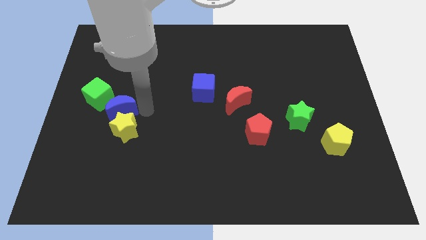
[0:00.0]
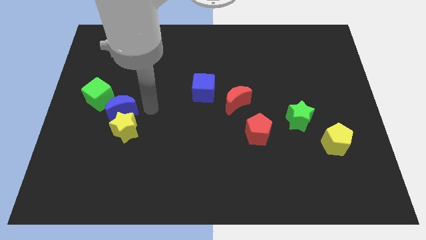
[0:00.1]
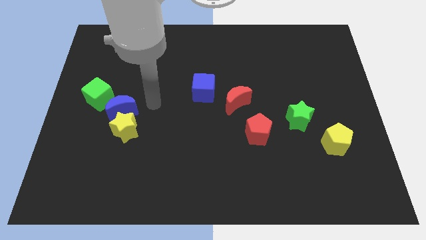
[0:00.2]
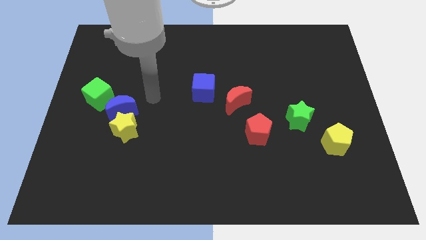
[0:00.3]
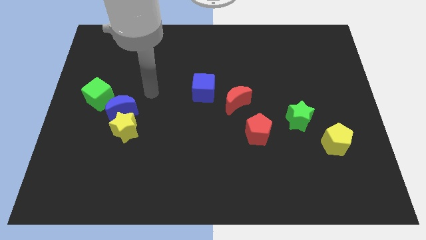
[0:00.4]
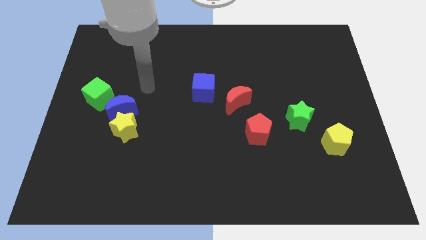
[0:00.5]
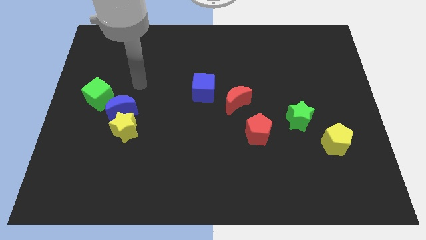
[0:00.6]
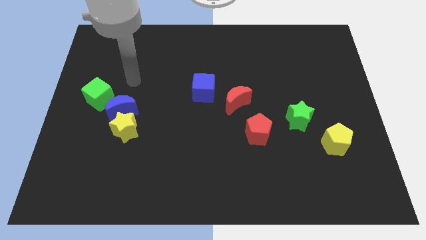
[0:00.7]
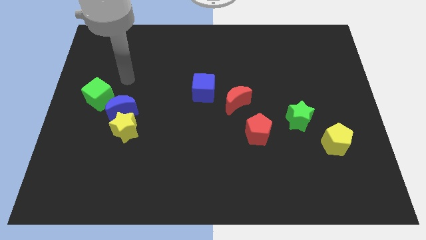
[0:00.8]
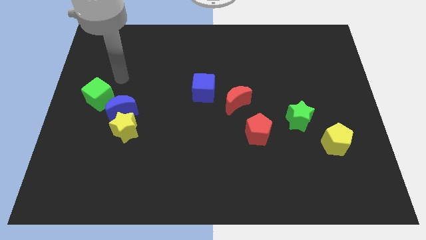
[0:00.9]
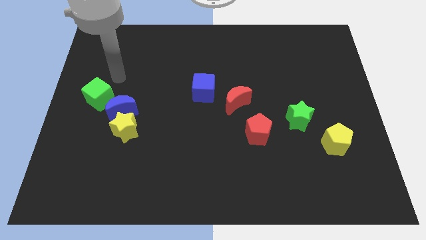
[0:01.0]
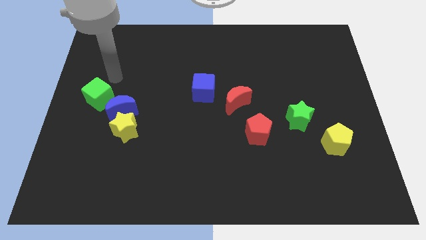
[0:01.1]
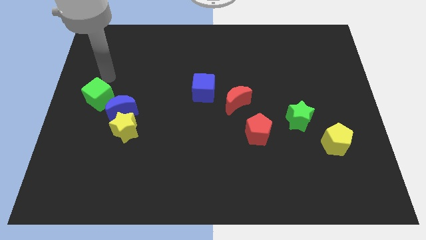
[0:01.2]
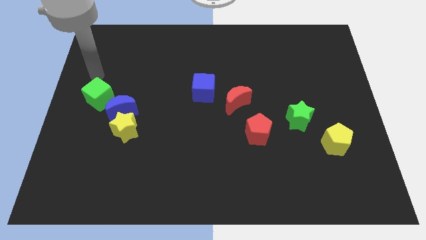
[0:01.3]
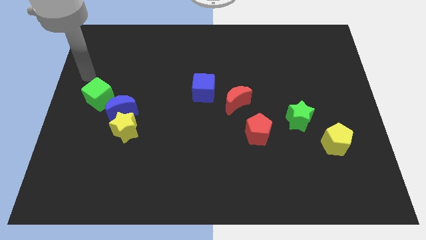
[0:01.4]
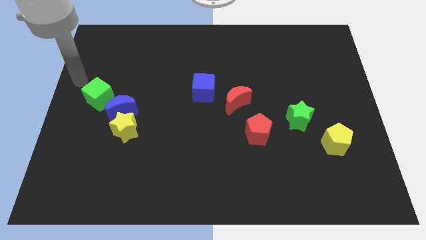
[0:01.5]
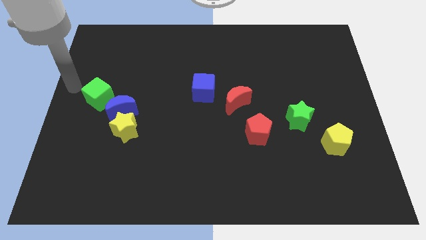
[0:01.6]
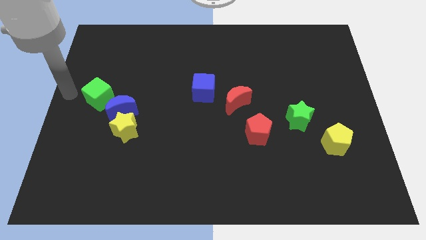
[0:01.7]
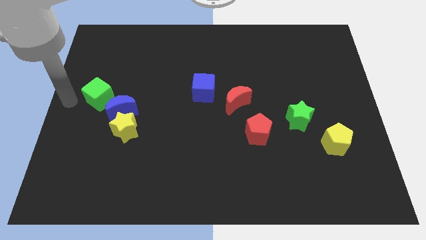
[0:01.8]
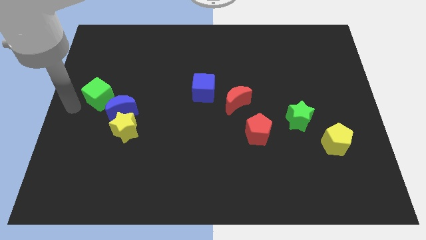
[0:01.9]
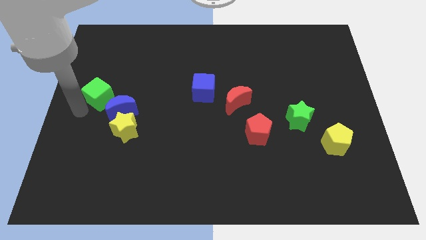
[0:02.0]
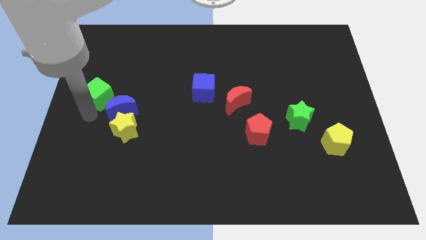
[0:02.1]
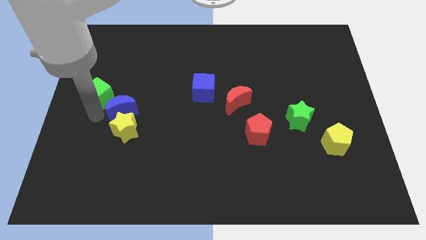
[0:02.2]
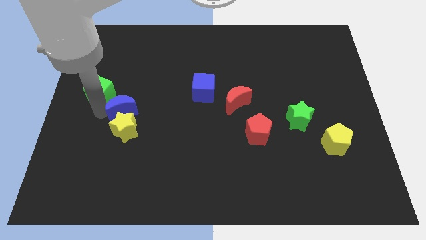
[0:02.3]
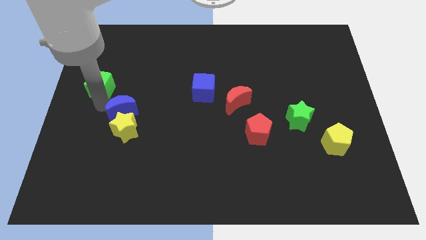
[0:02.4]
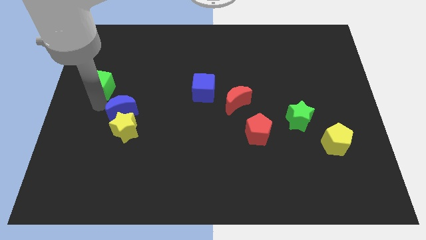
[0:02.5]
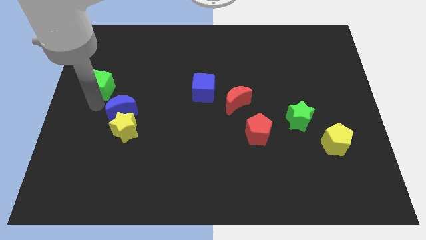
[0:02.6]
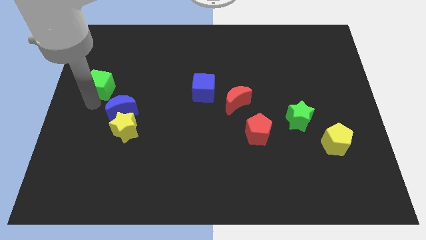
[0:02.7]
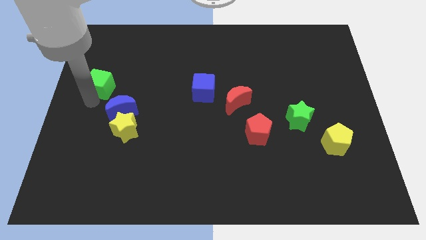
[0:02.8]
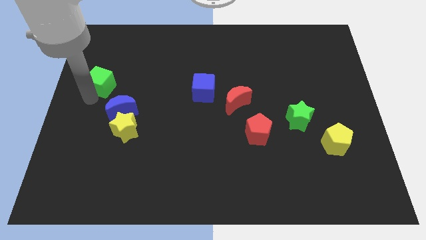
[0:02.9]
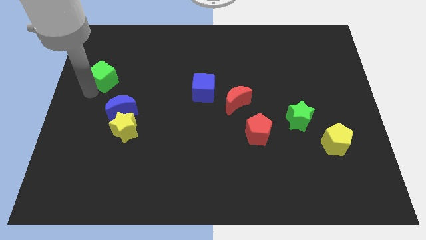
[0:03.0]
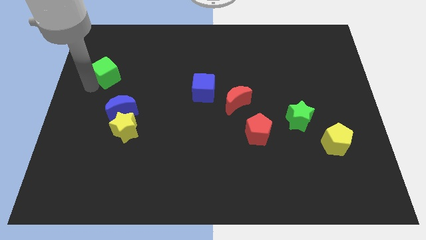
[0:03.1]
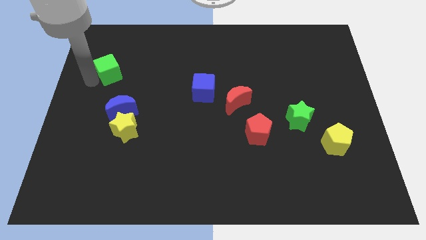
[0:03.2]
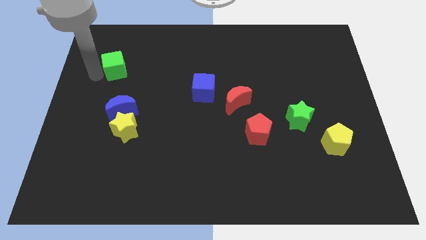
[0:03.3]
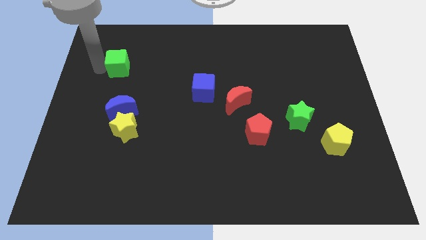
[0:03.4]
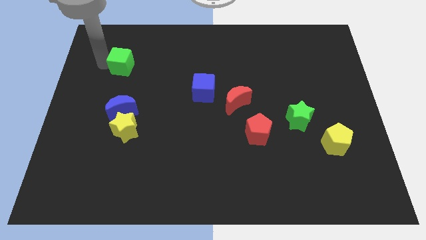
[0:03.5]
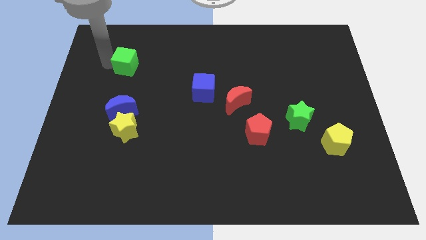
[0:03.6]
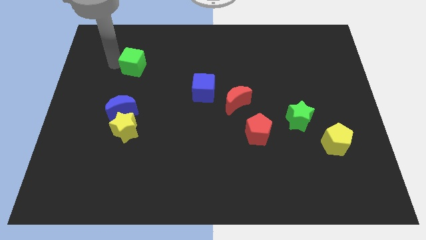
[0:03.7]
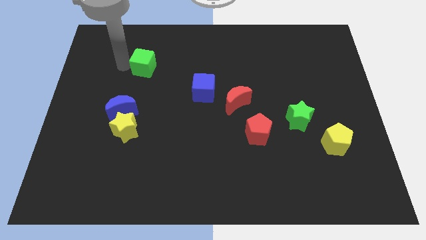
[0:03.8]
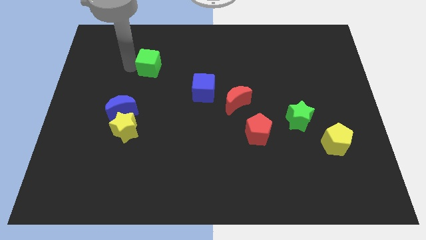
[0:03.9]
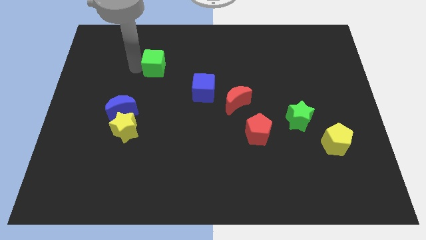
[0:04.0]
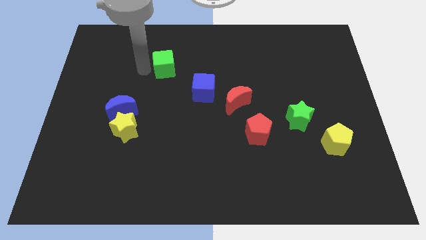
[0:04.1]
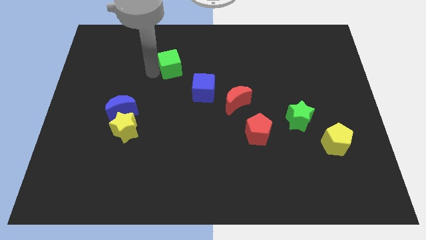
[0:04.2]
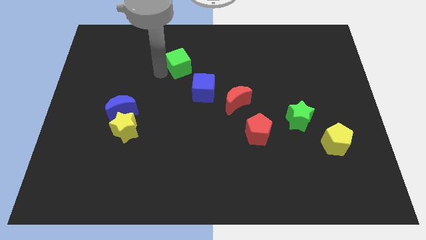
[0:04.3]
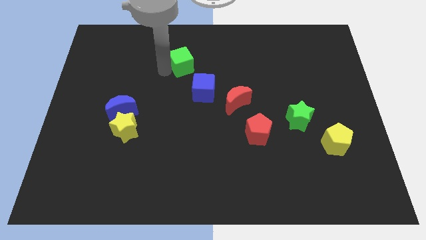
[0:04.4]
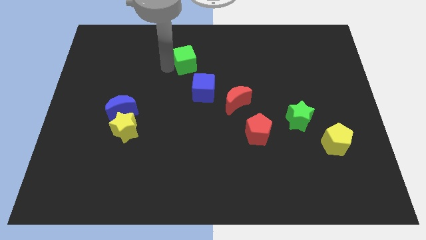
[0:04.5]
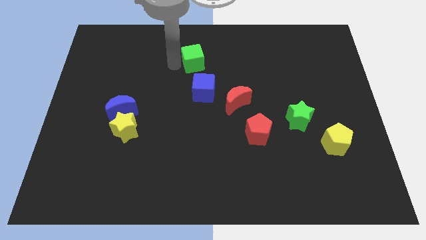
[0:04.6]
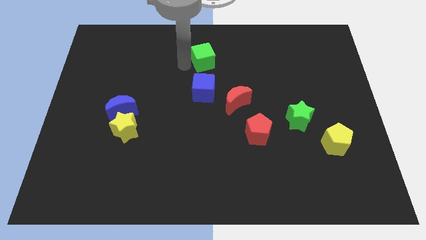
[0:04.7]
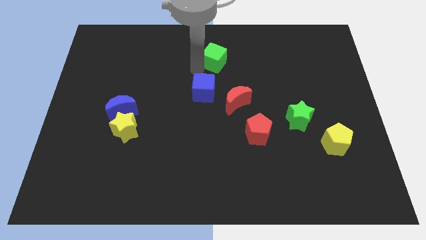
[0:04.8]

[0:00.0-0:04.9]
move the green cube to the top center

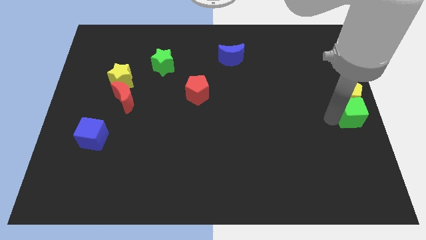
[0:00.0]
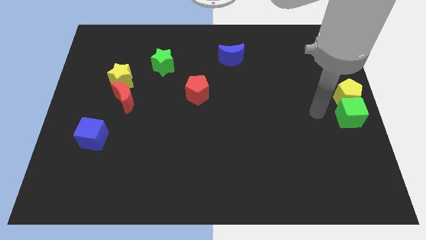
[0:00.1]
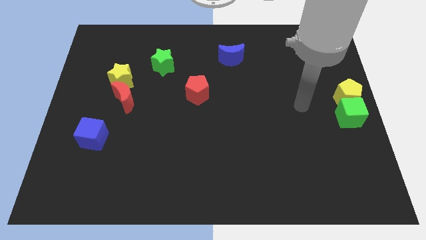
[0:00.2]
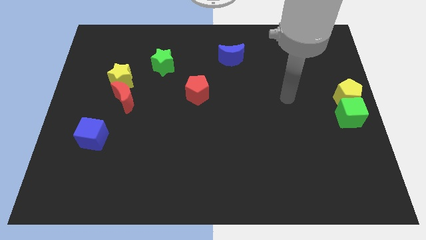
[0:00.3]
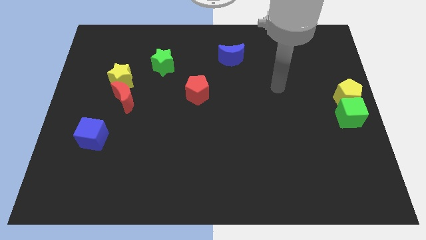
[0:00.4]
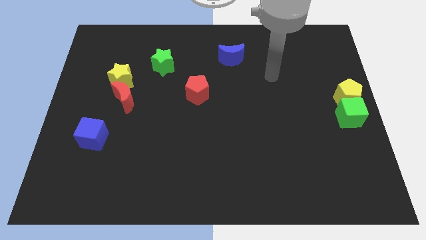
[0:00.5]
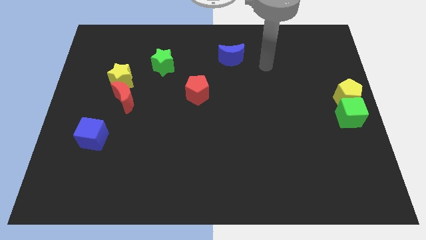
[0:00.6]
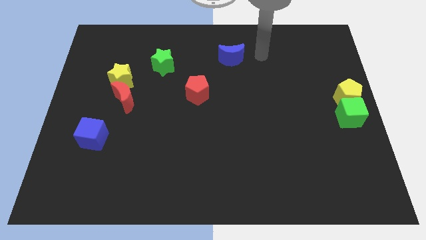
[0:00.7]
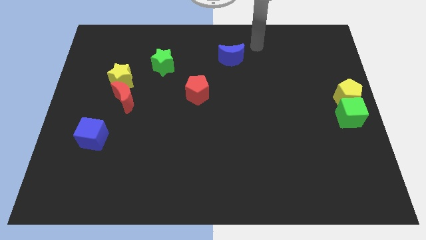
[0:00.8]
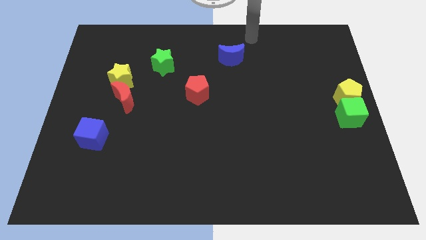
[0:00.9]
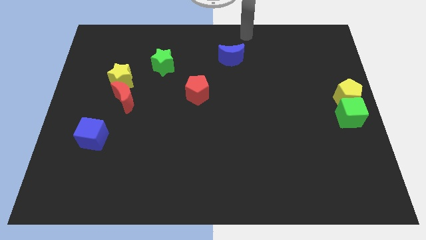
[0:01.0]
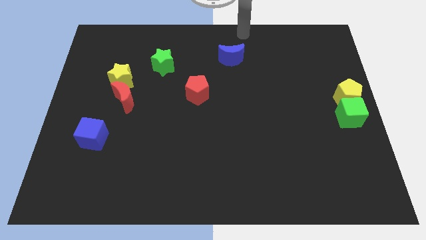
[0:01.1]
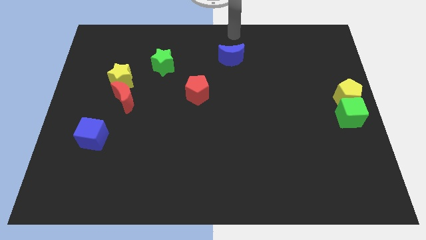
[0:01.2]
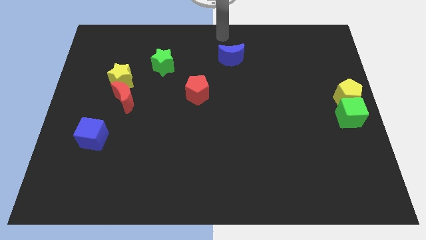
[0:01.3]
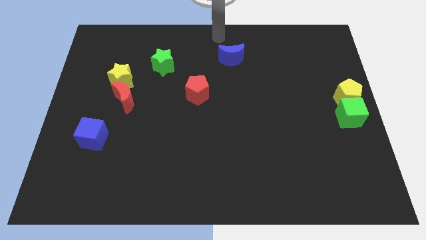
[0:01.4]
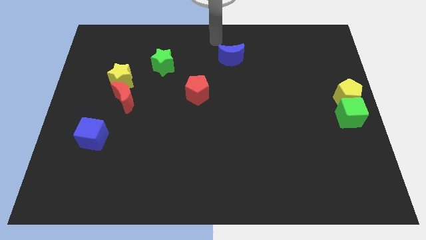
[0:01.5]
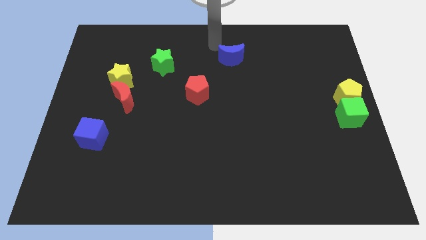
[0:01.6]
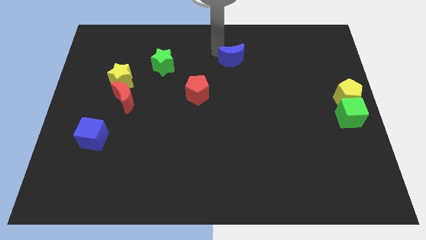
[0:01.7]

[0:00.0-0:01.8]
place the arm on top of the blue moon

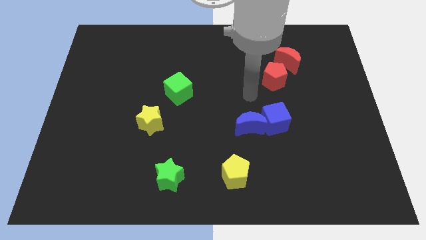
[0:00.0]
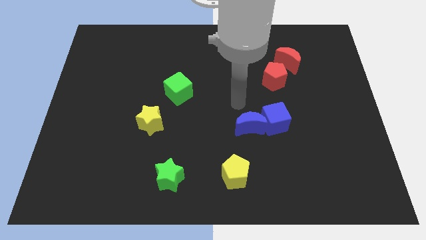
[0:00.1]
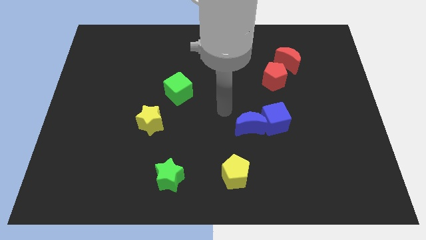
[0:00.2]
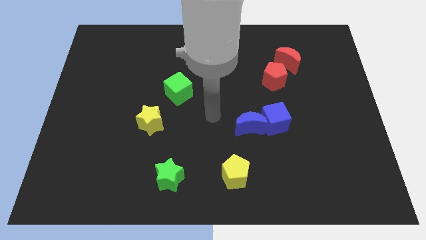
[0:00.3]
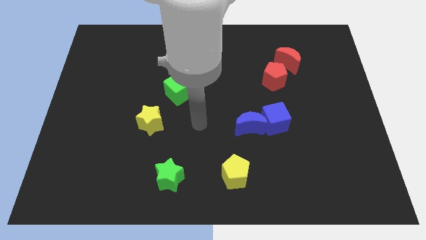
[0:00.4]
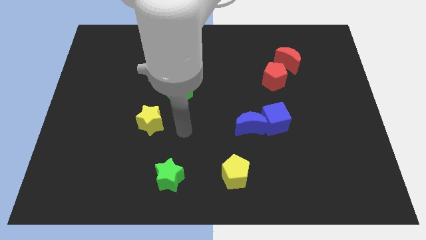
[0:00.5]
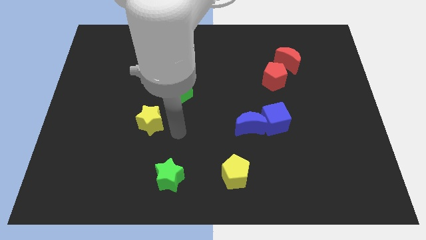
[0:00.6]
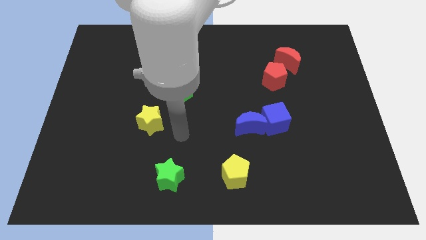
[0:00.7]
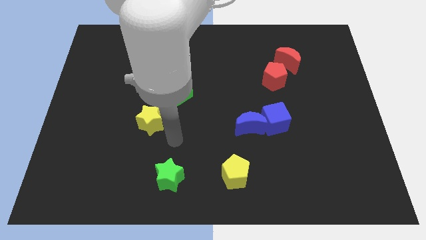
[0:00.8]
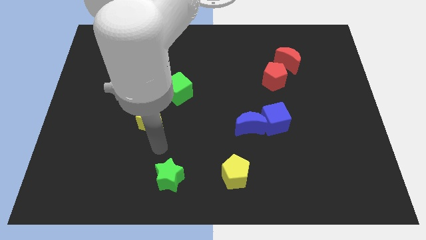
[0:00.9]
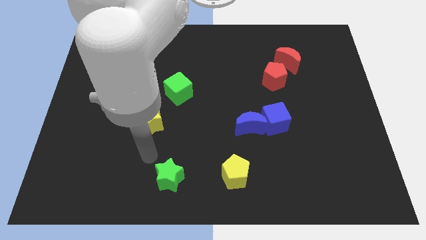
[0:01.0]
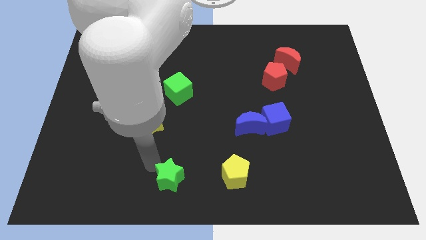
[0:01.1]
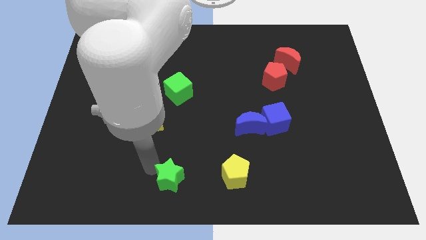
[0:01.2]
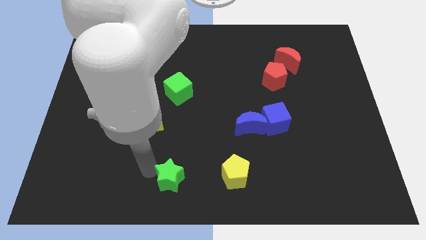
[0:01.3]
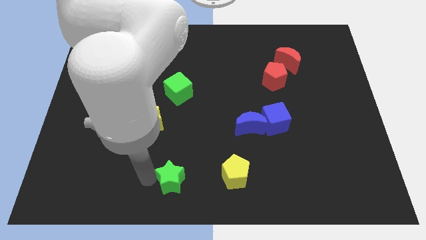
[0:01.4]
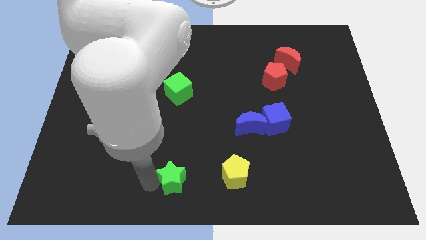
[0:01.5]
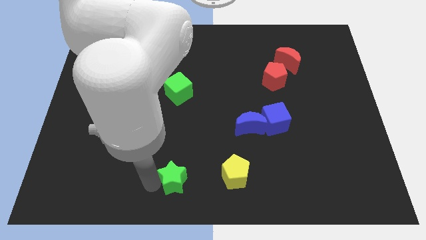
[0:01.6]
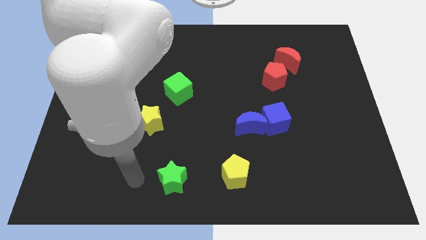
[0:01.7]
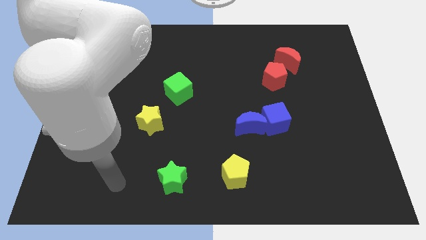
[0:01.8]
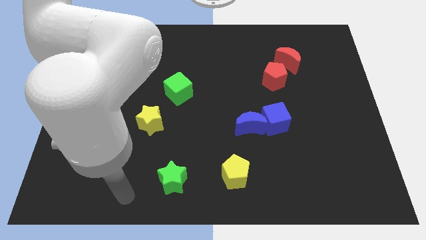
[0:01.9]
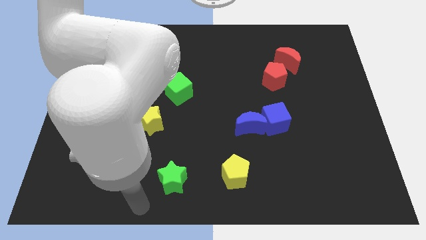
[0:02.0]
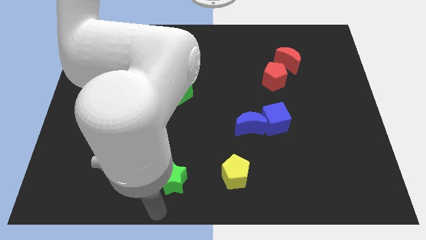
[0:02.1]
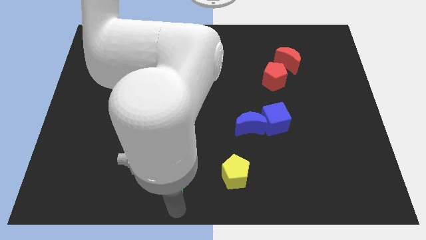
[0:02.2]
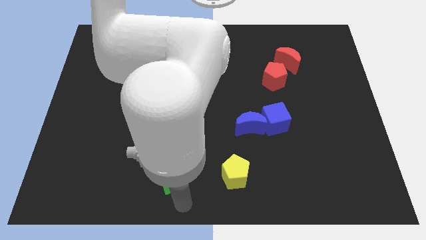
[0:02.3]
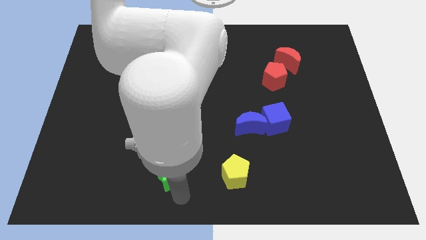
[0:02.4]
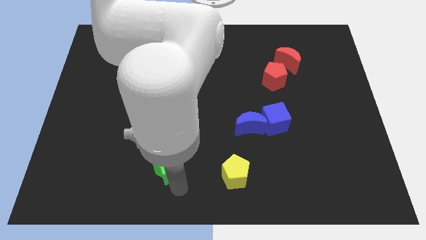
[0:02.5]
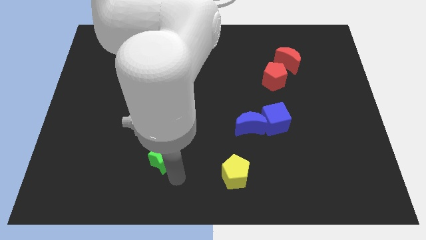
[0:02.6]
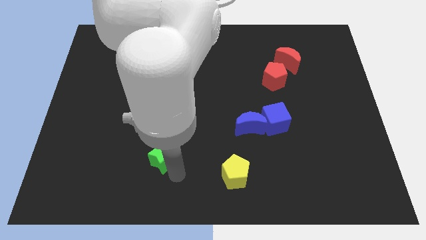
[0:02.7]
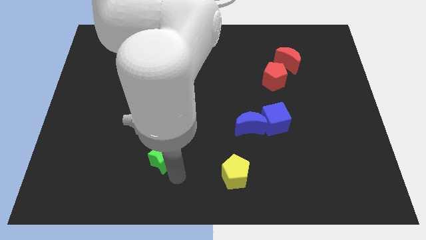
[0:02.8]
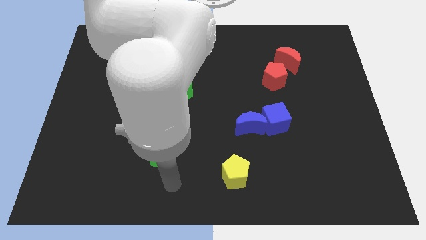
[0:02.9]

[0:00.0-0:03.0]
place the green star below the yellow star
